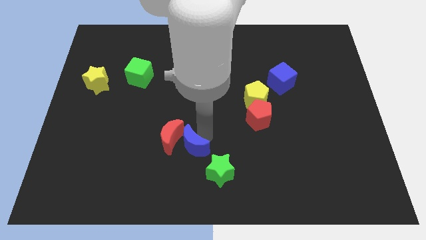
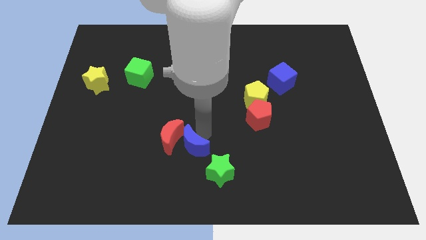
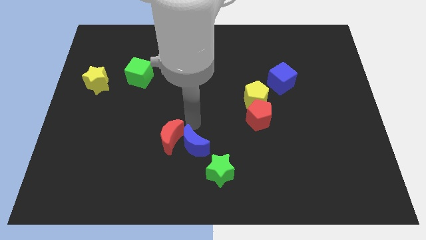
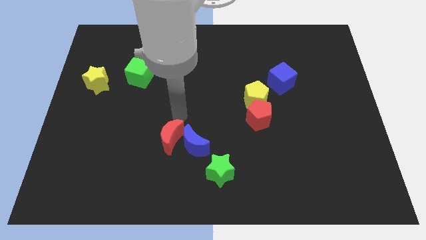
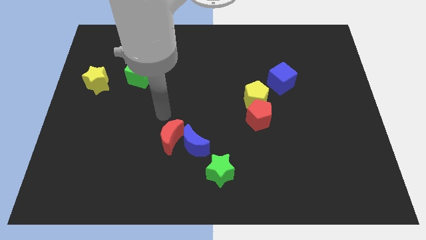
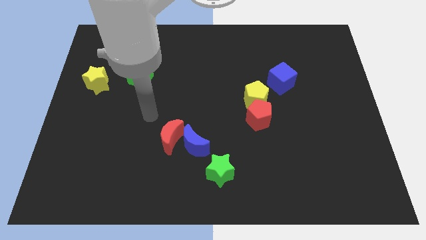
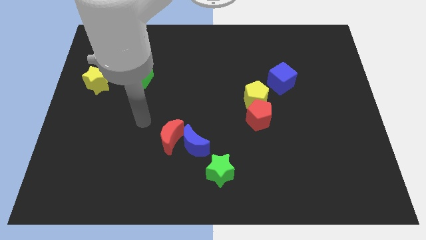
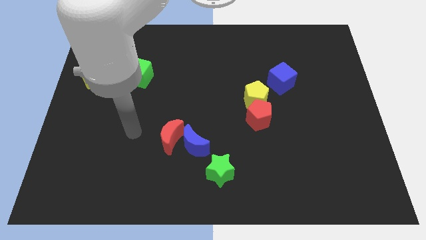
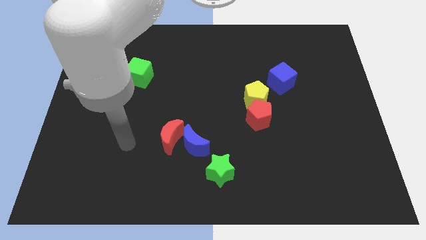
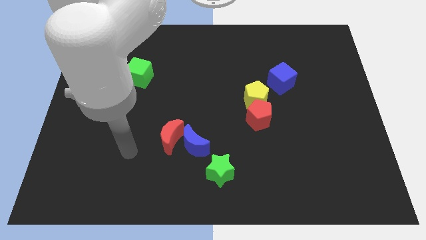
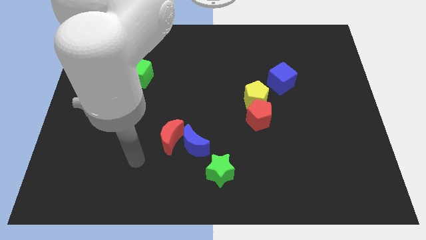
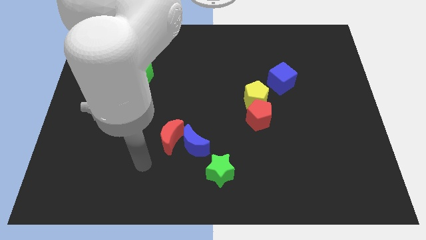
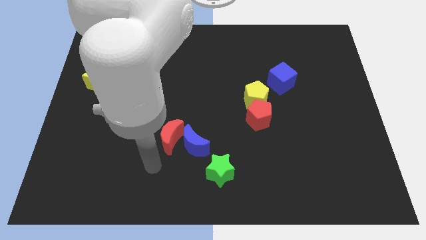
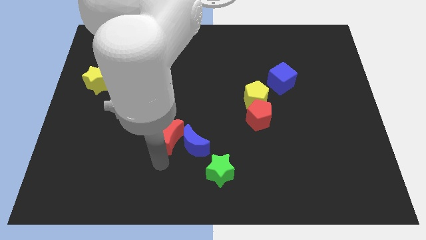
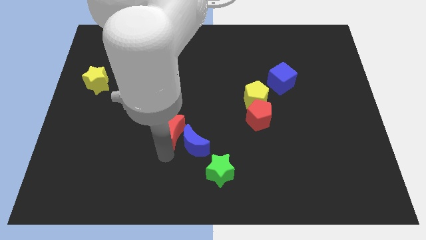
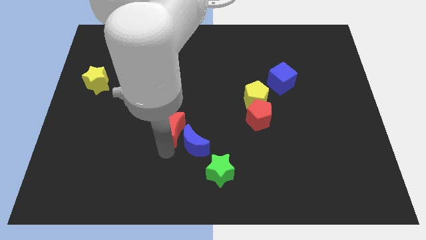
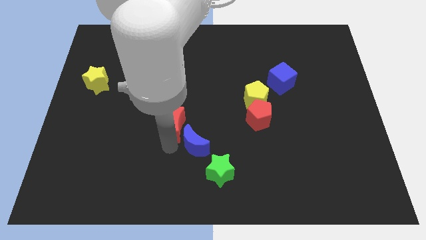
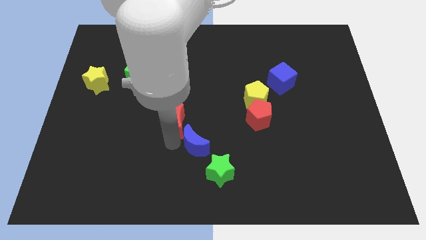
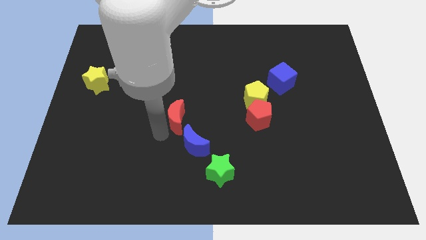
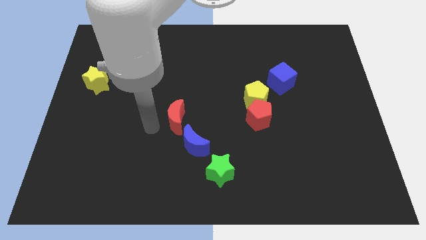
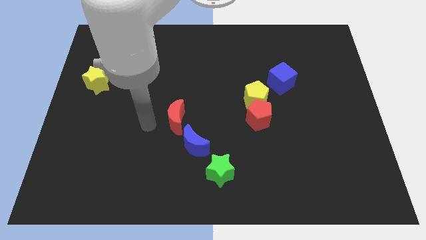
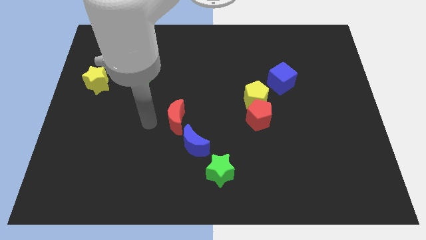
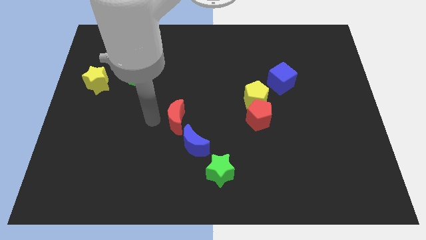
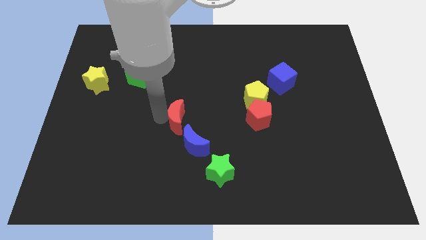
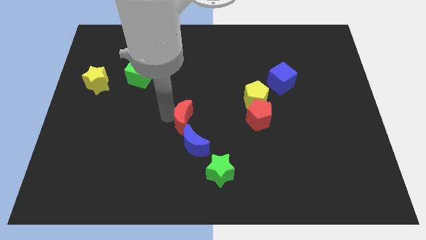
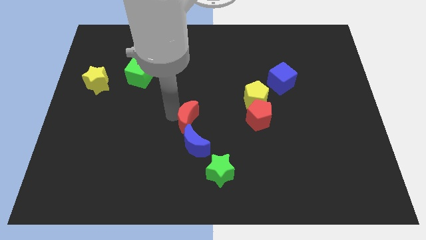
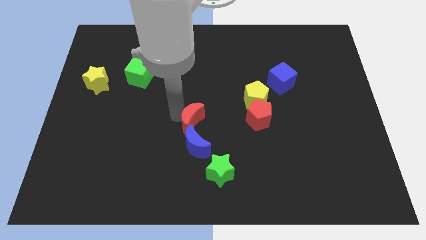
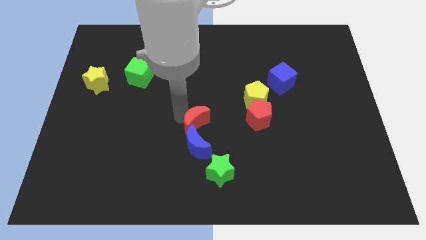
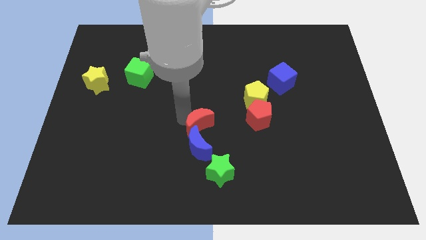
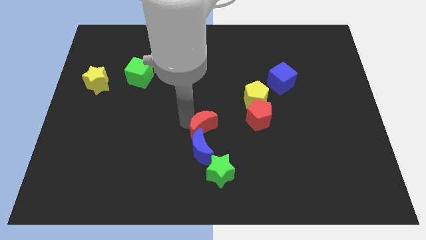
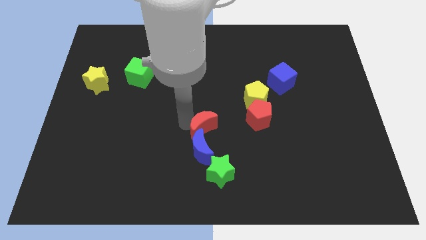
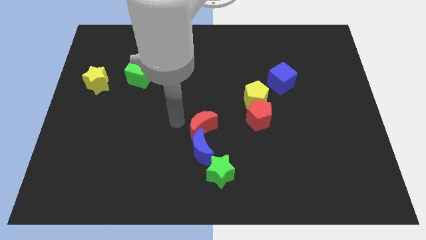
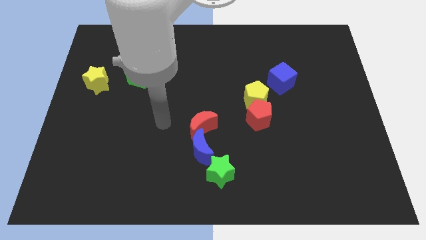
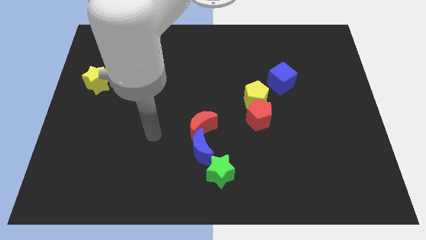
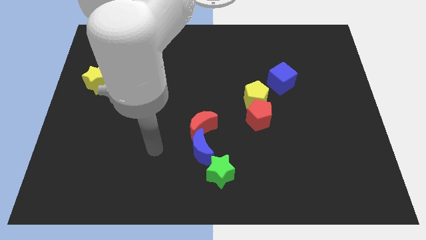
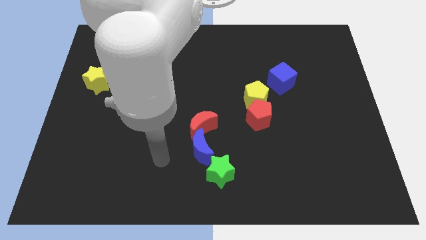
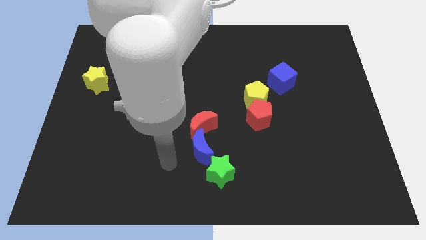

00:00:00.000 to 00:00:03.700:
push the blue and the red moon slightly to the right

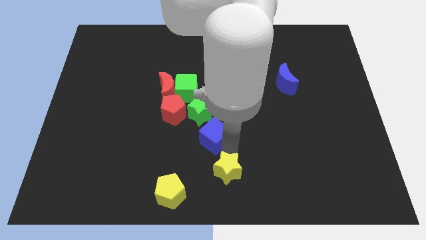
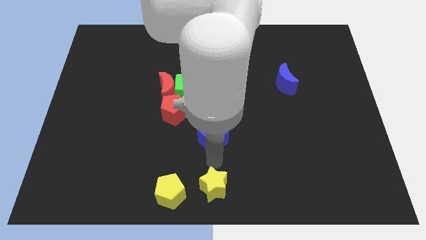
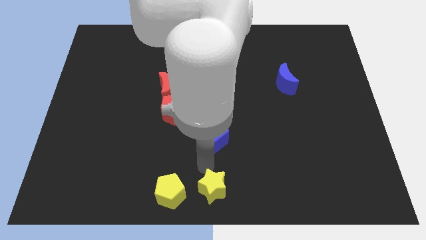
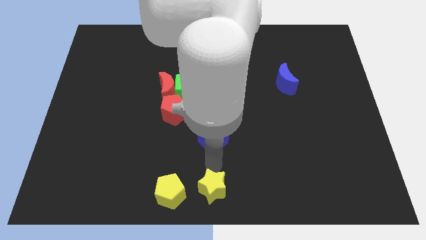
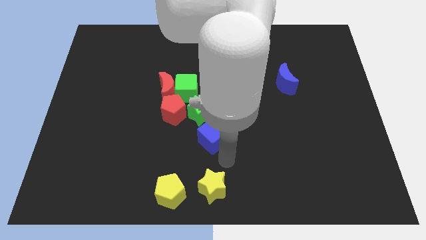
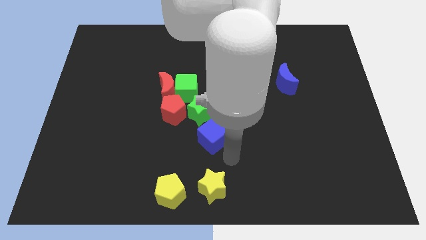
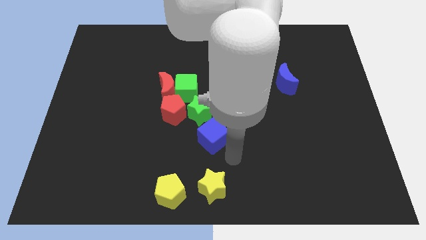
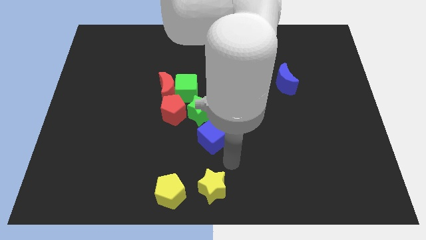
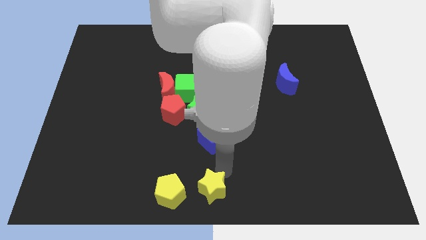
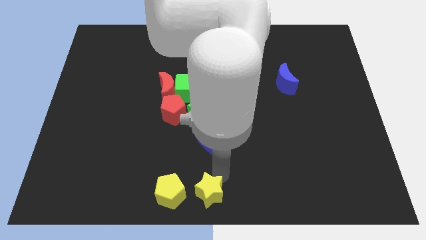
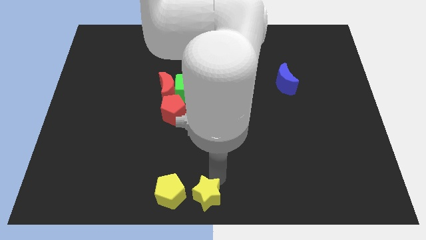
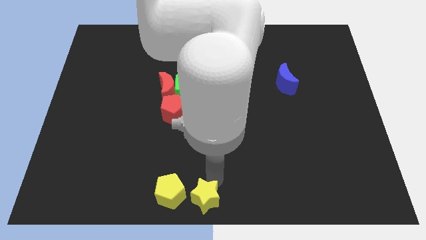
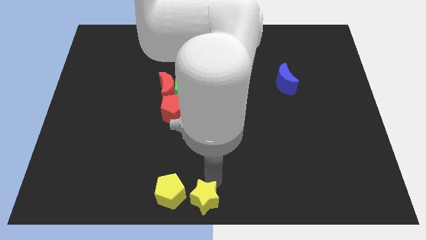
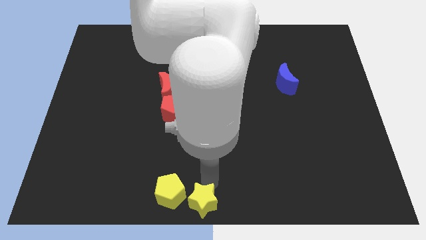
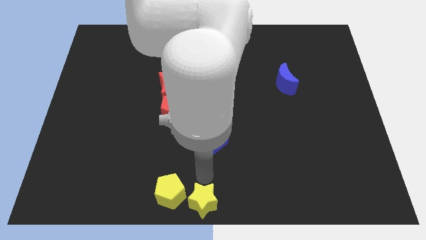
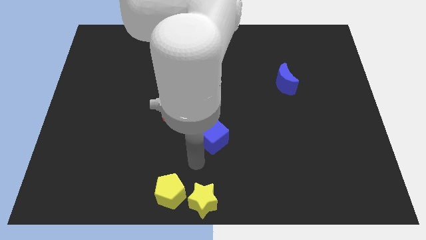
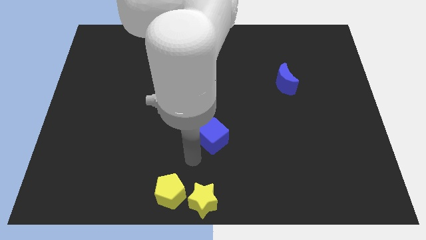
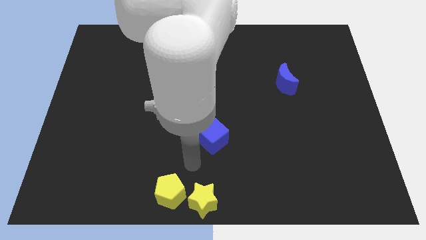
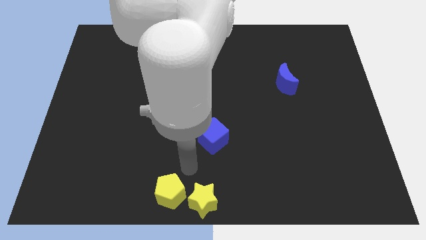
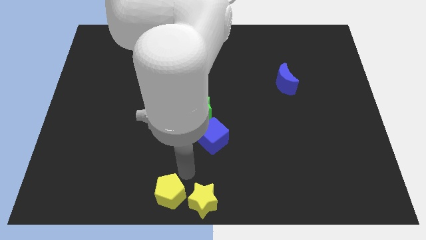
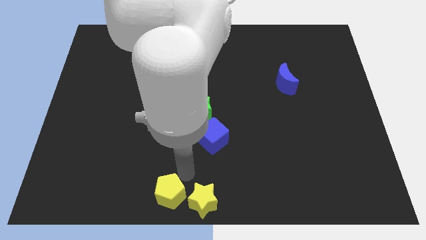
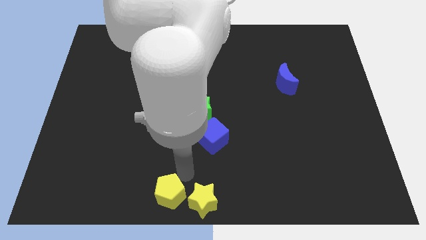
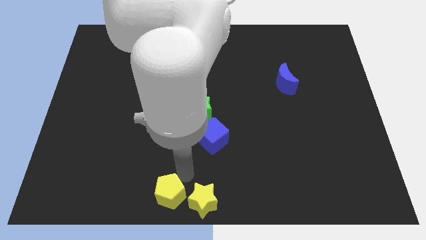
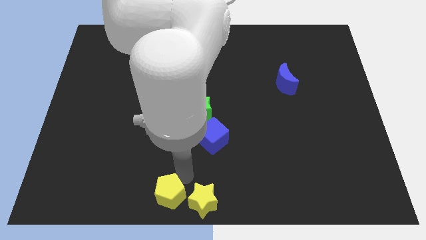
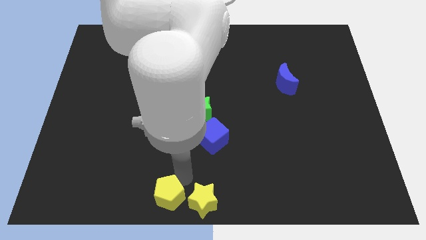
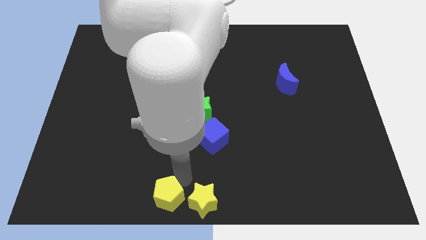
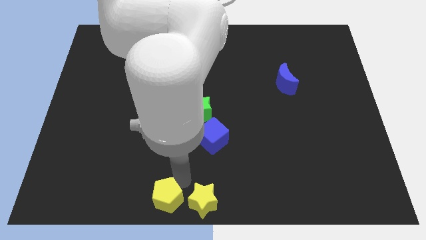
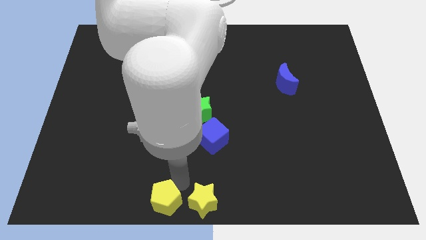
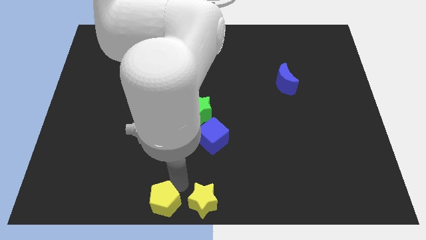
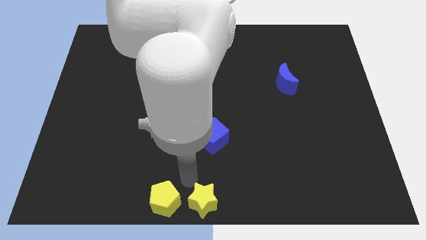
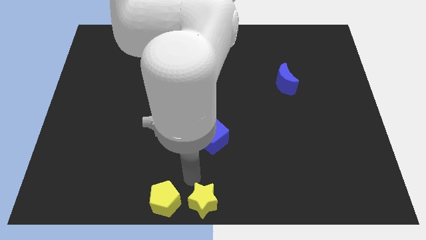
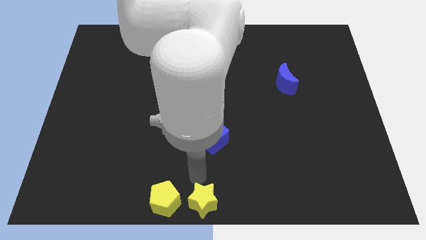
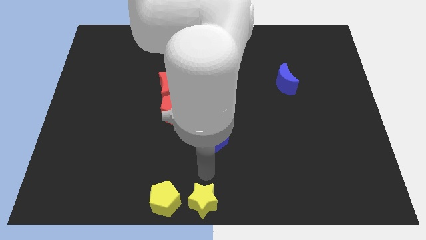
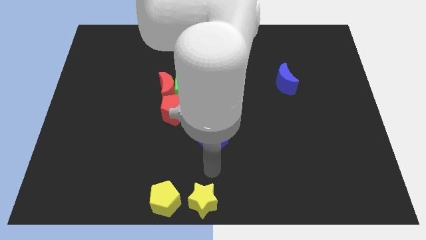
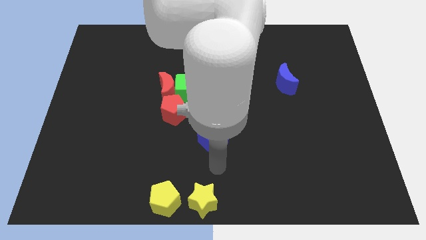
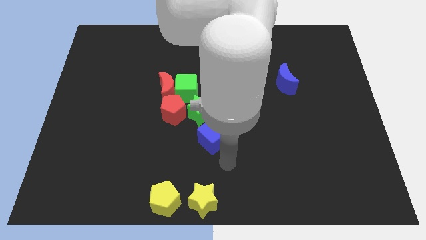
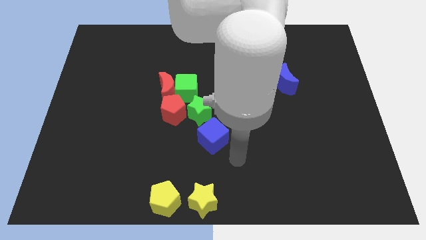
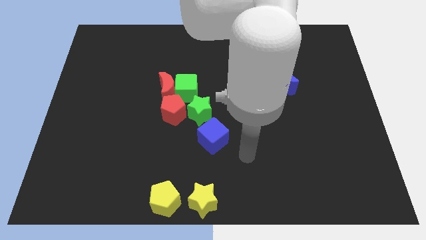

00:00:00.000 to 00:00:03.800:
push yellow pentagon yellow star to the bottom center

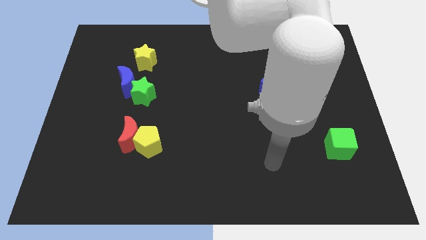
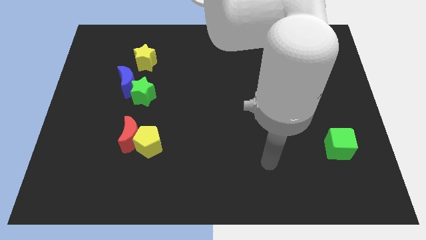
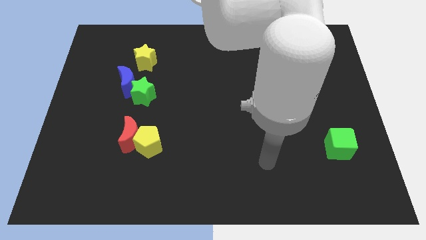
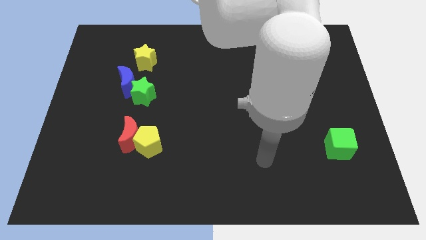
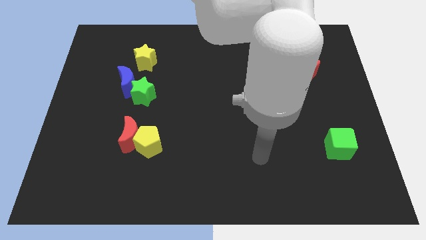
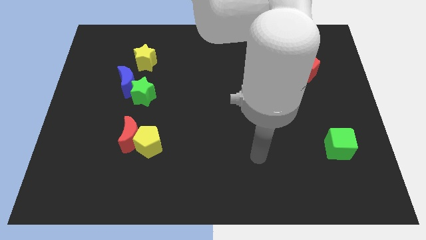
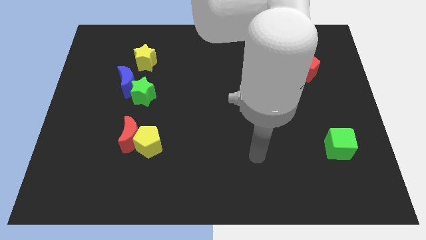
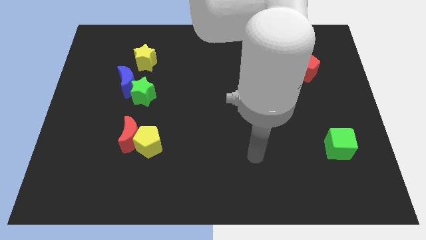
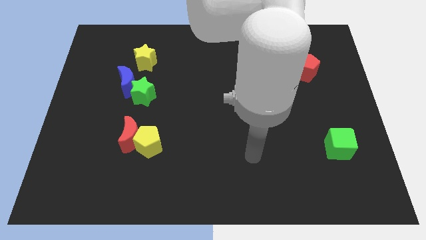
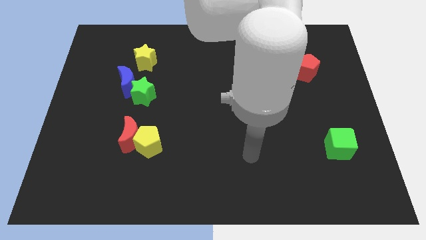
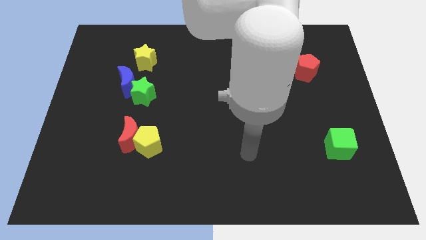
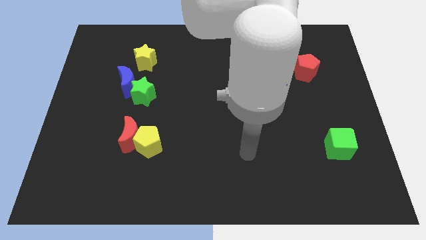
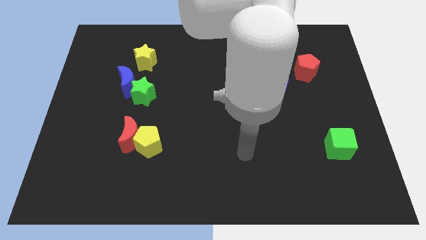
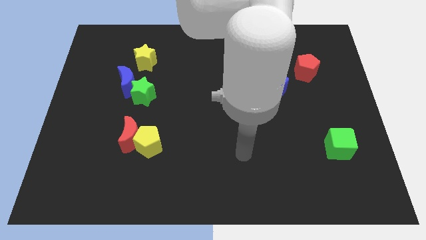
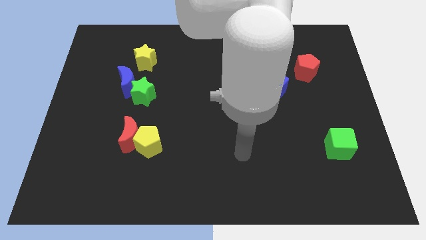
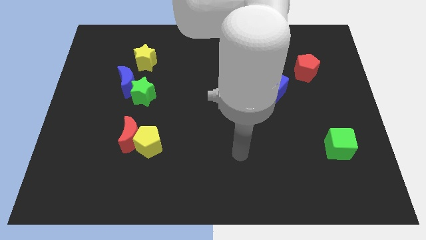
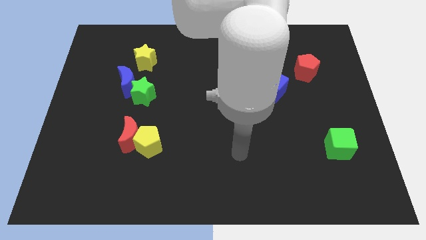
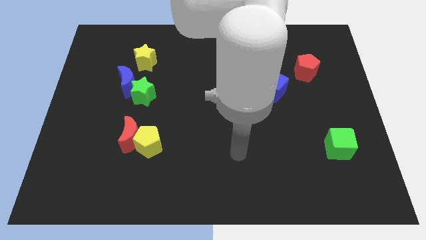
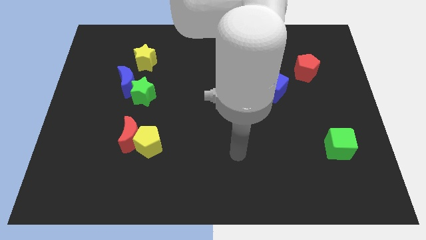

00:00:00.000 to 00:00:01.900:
move your arm towards the left side of the board
